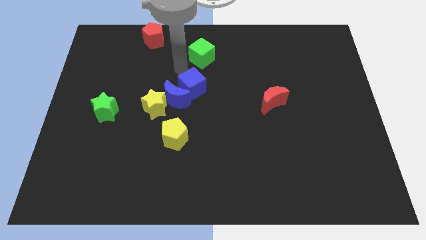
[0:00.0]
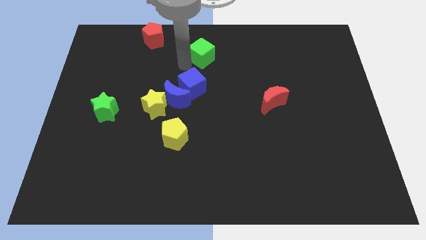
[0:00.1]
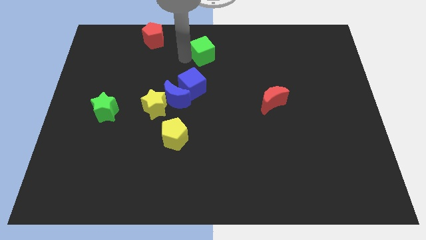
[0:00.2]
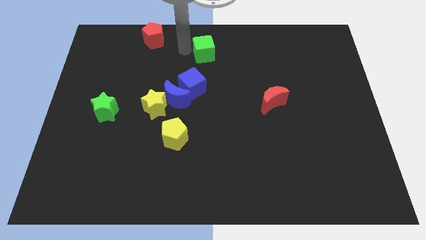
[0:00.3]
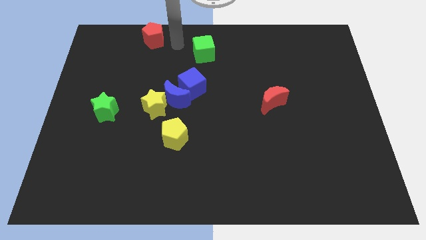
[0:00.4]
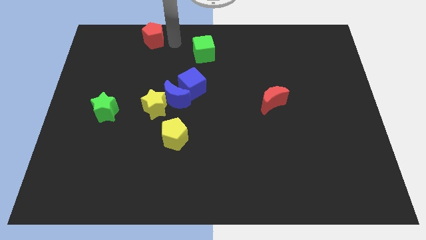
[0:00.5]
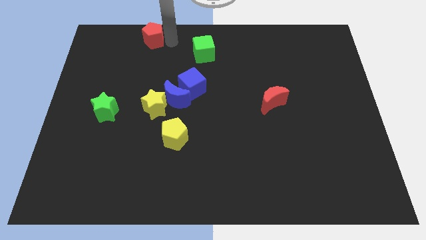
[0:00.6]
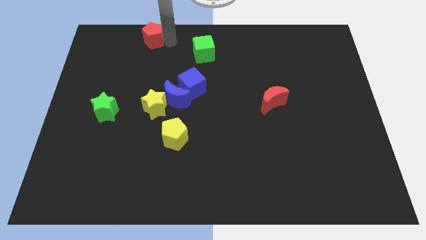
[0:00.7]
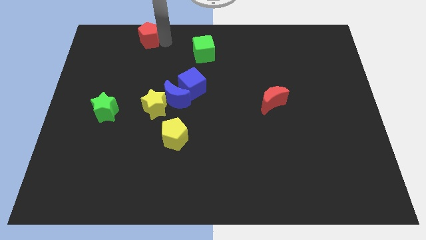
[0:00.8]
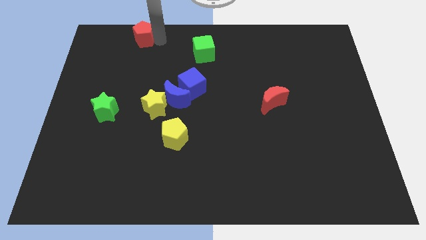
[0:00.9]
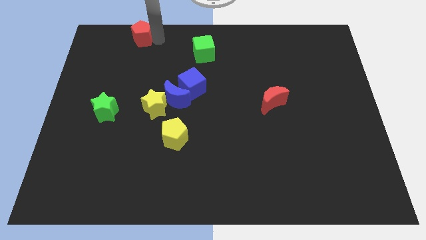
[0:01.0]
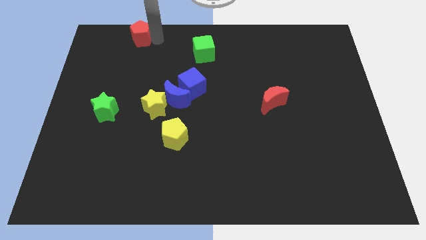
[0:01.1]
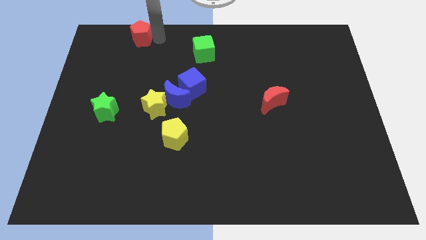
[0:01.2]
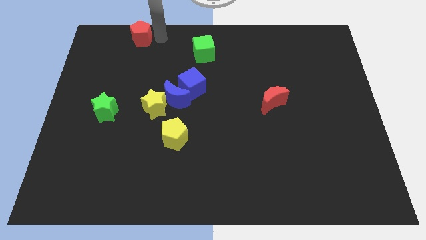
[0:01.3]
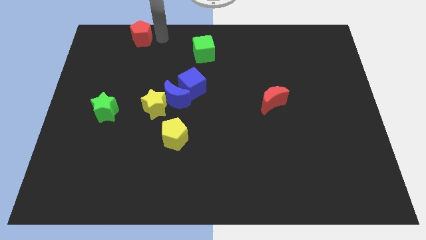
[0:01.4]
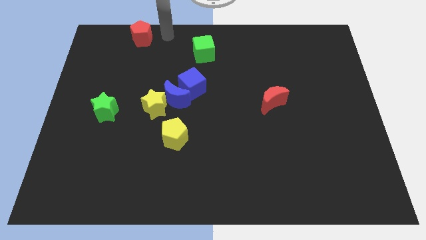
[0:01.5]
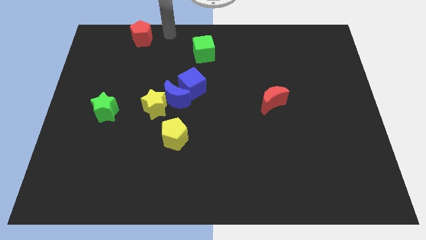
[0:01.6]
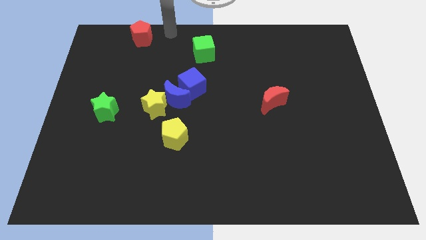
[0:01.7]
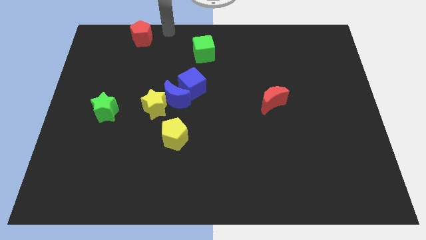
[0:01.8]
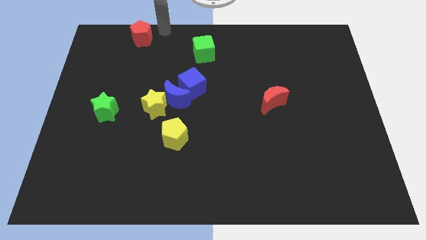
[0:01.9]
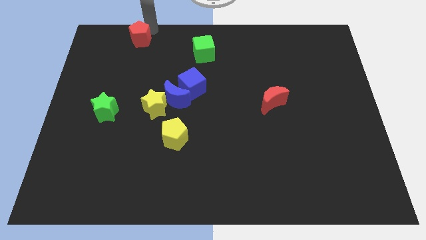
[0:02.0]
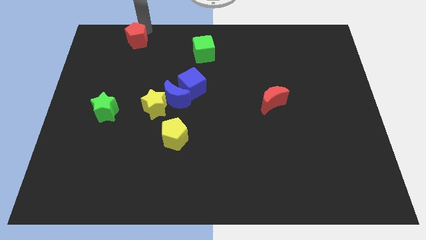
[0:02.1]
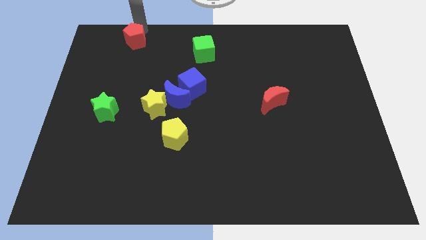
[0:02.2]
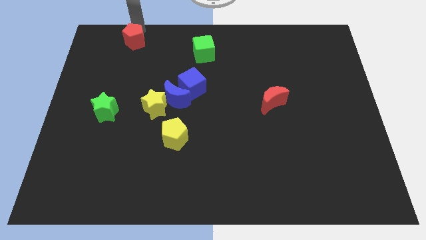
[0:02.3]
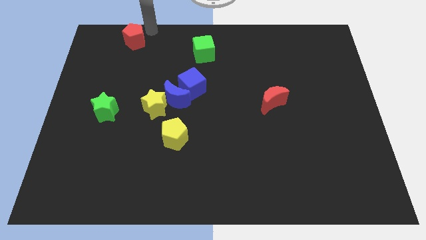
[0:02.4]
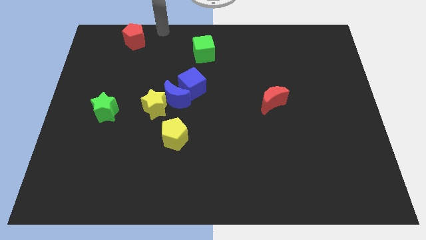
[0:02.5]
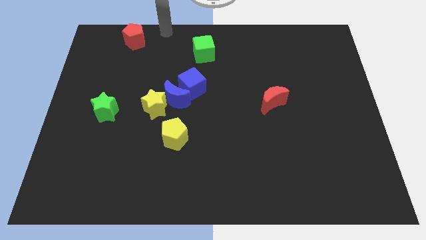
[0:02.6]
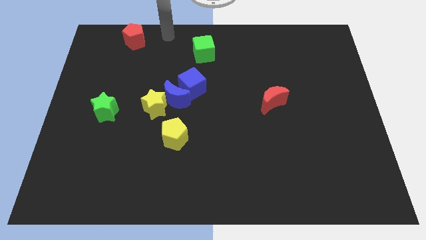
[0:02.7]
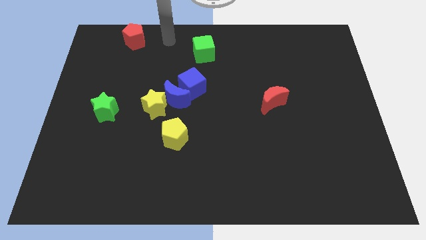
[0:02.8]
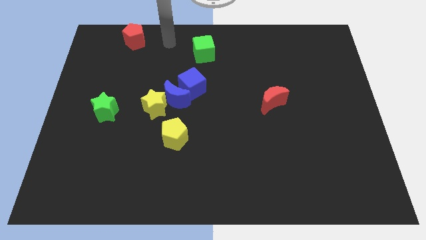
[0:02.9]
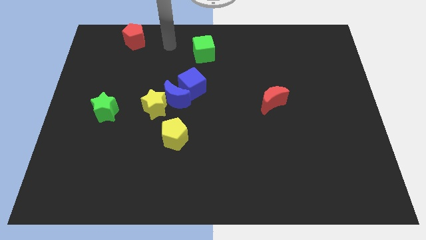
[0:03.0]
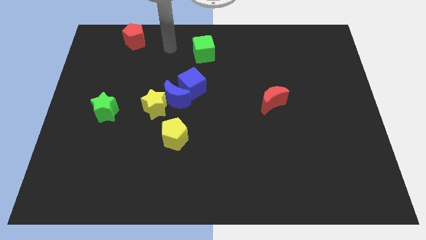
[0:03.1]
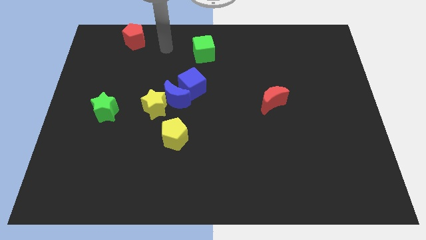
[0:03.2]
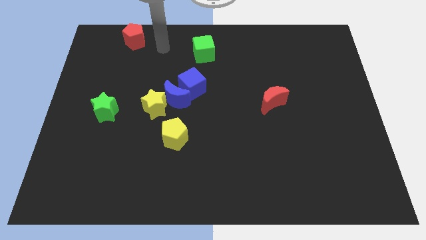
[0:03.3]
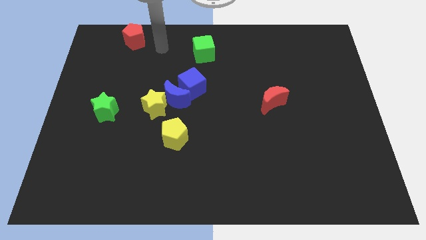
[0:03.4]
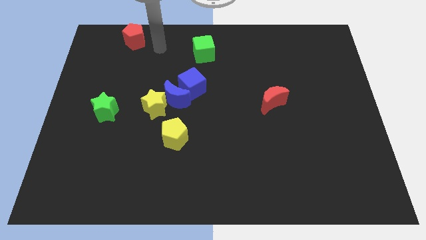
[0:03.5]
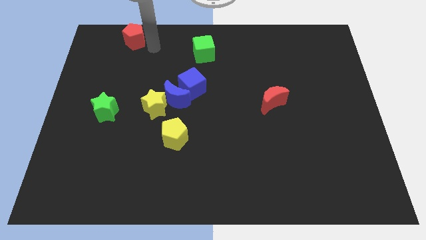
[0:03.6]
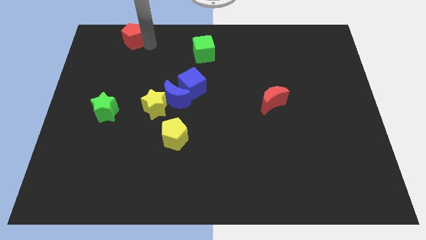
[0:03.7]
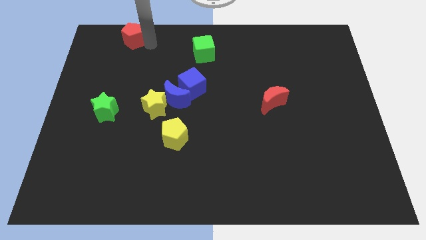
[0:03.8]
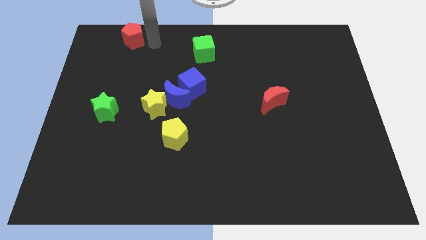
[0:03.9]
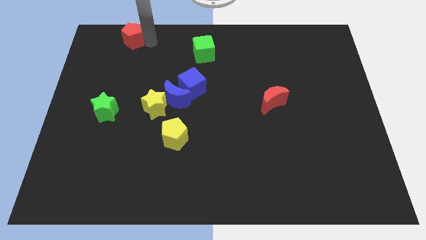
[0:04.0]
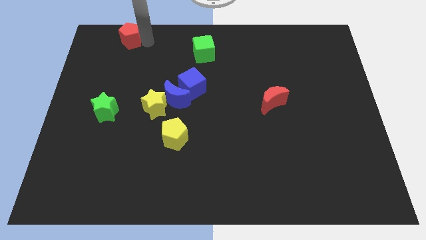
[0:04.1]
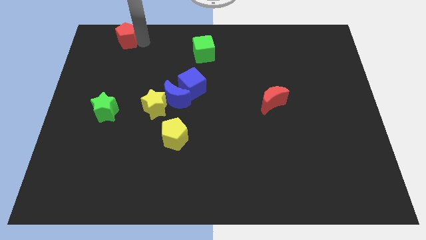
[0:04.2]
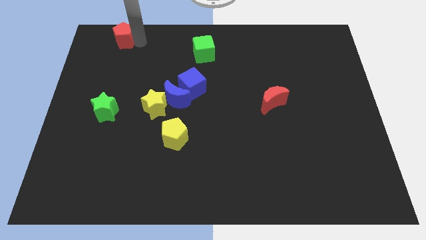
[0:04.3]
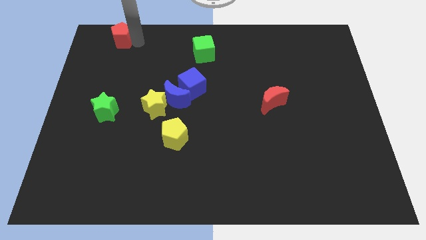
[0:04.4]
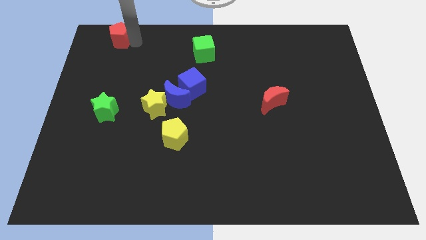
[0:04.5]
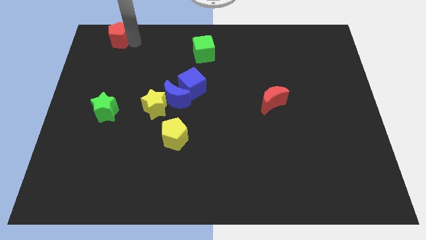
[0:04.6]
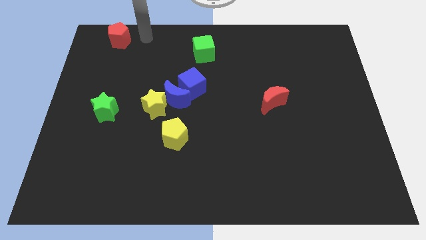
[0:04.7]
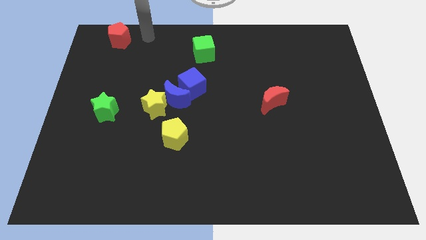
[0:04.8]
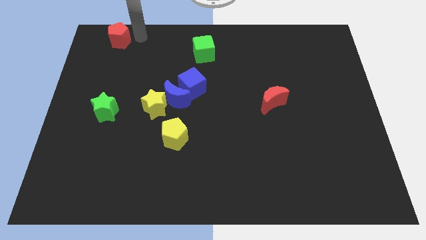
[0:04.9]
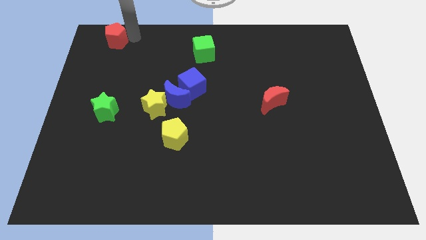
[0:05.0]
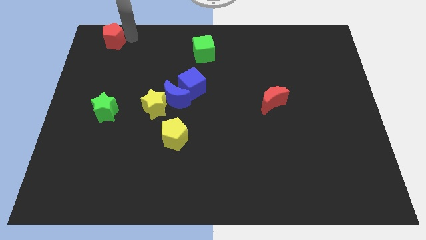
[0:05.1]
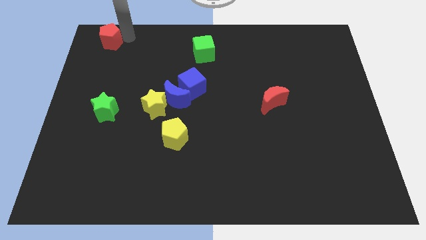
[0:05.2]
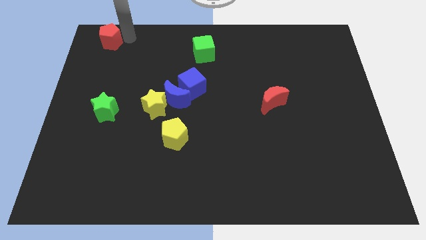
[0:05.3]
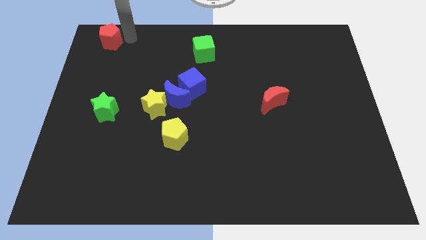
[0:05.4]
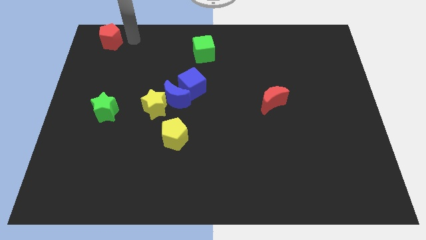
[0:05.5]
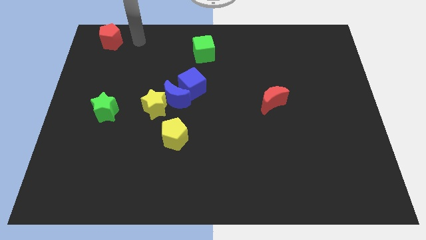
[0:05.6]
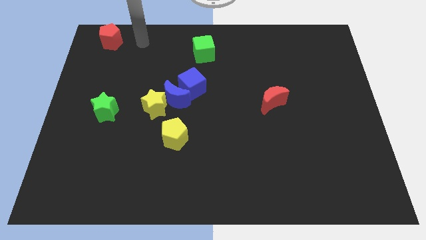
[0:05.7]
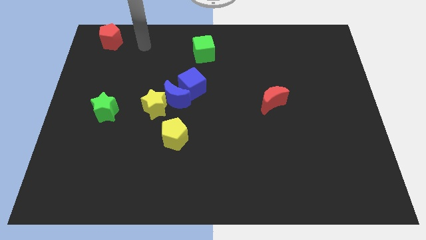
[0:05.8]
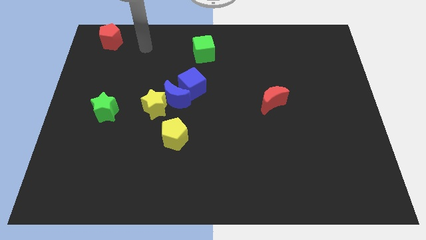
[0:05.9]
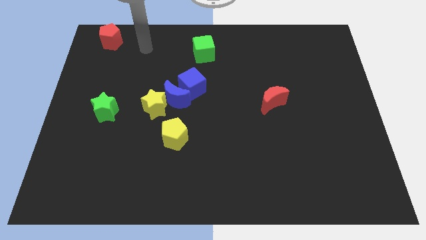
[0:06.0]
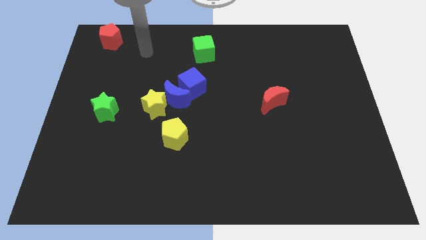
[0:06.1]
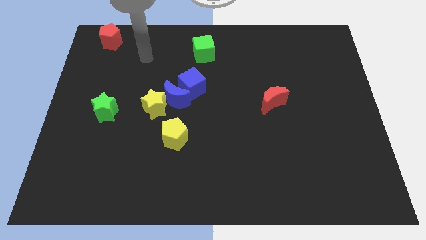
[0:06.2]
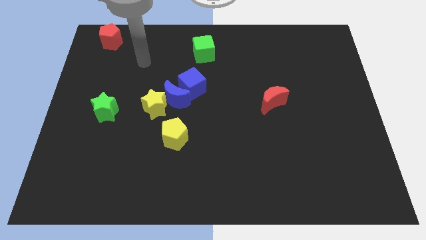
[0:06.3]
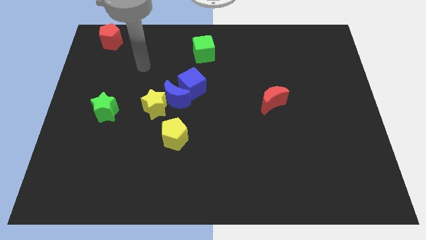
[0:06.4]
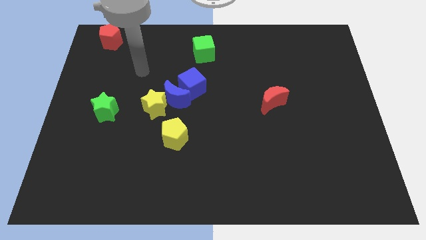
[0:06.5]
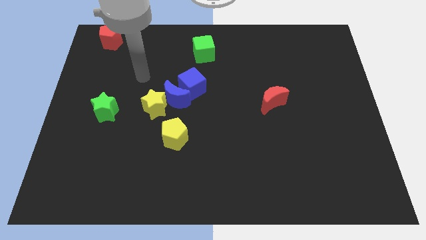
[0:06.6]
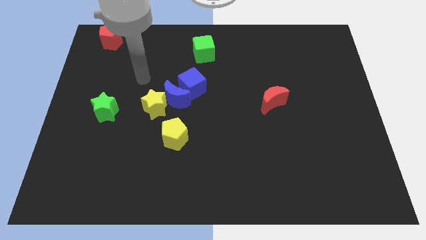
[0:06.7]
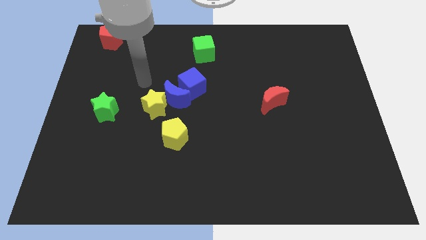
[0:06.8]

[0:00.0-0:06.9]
move the red pentagon slightly left

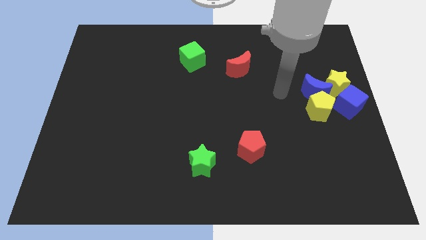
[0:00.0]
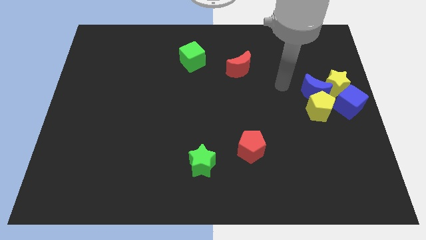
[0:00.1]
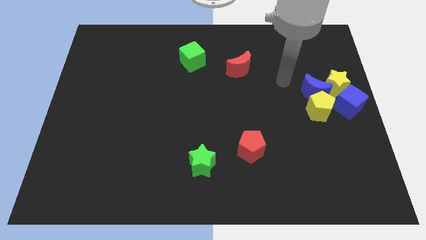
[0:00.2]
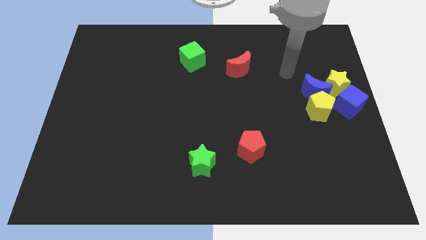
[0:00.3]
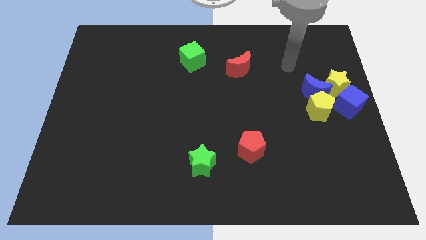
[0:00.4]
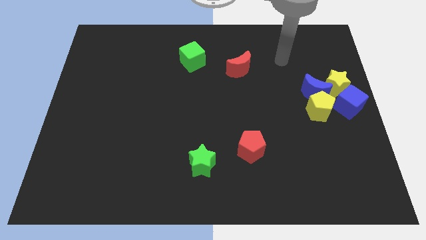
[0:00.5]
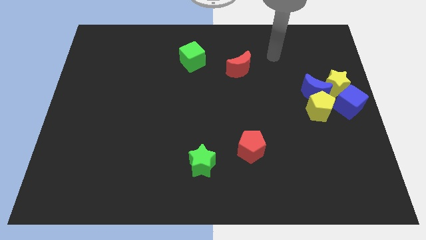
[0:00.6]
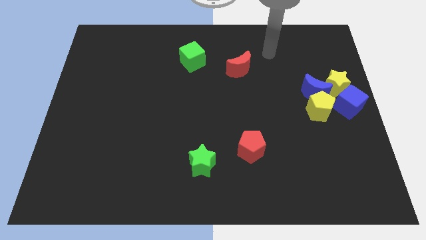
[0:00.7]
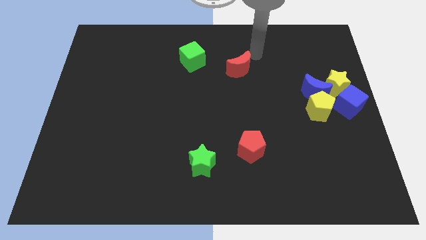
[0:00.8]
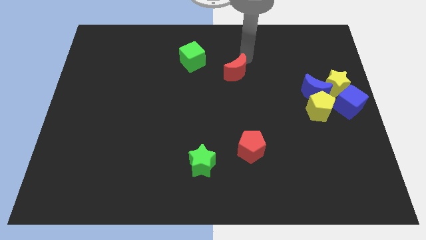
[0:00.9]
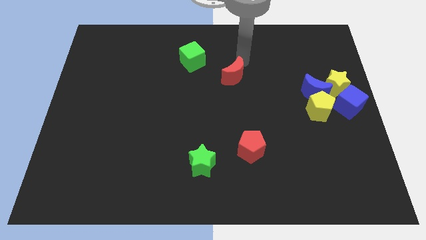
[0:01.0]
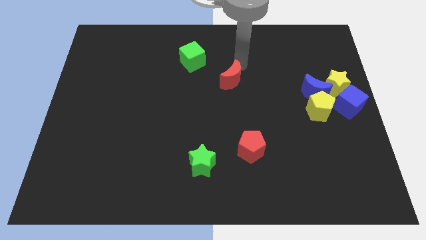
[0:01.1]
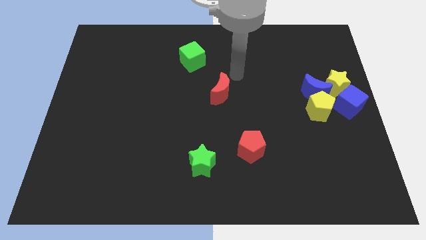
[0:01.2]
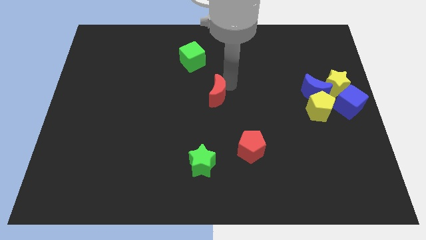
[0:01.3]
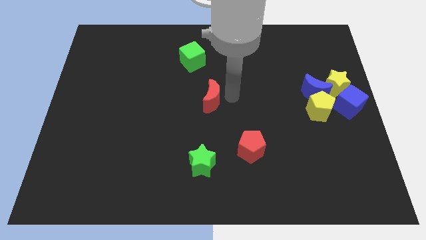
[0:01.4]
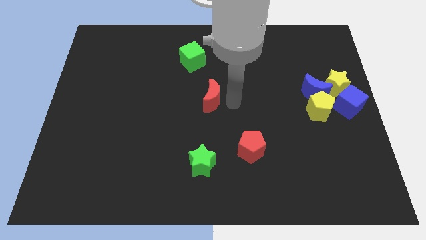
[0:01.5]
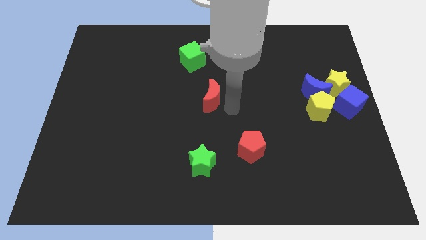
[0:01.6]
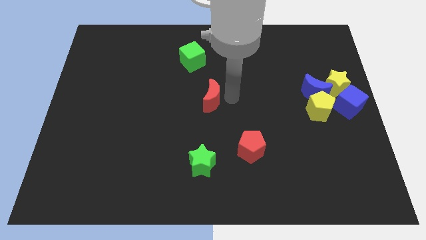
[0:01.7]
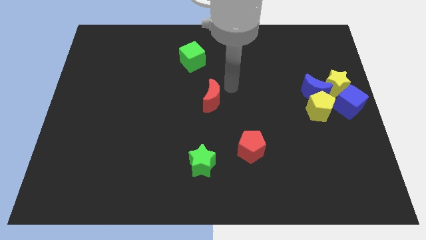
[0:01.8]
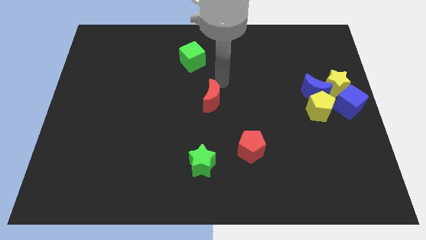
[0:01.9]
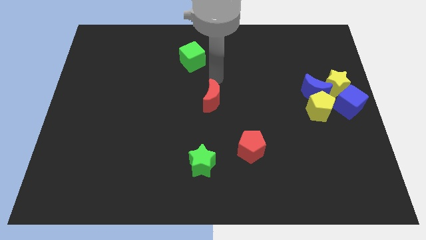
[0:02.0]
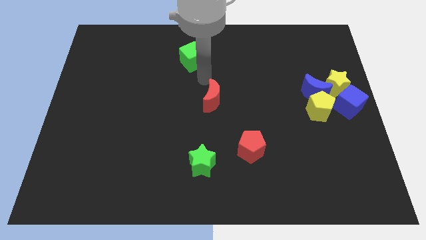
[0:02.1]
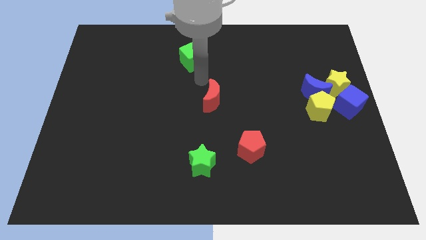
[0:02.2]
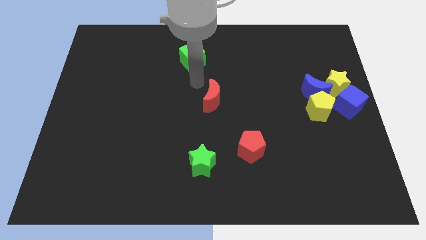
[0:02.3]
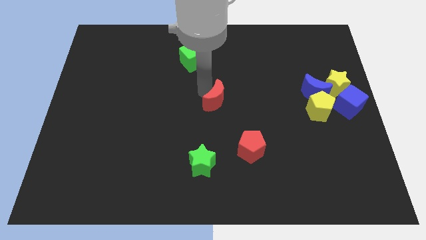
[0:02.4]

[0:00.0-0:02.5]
move the red moon to the center
